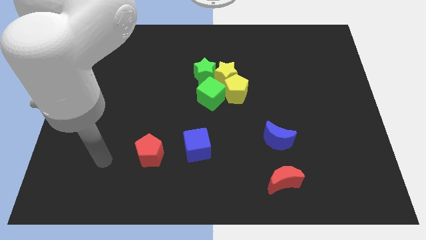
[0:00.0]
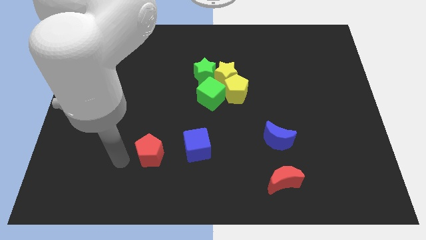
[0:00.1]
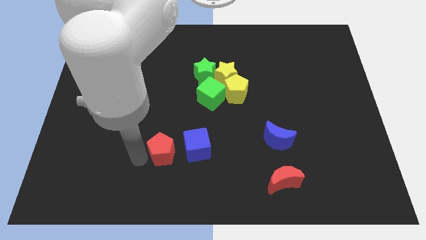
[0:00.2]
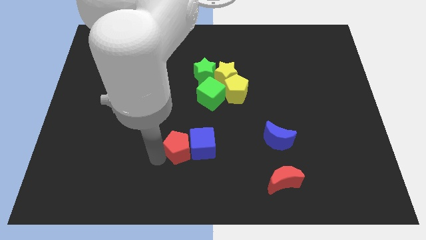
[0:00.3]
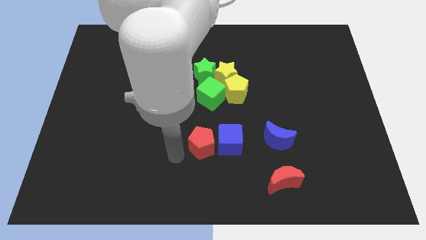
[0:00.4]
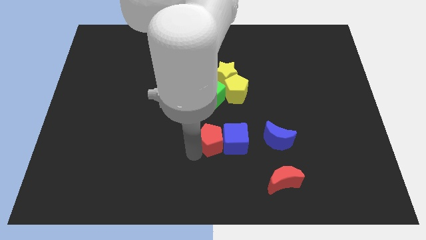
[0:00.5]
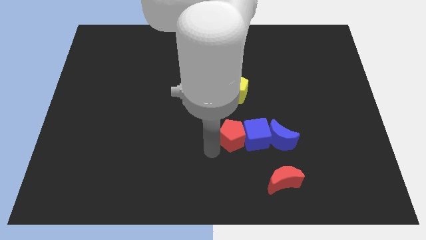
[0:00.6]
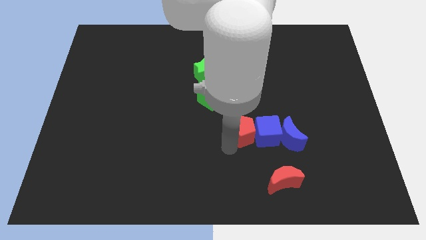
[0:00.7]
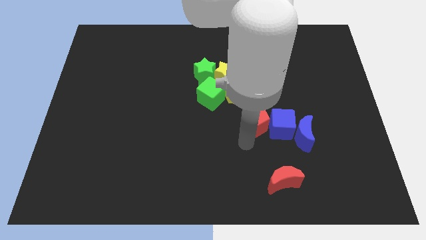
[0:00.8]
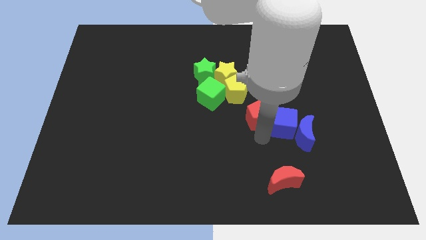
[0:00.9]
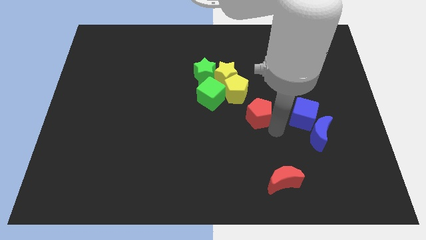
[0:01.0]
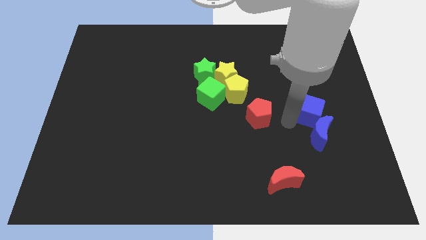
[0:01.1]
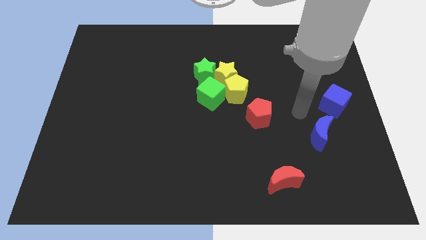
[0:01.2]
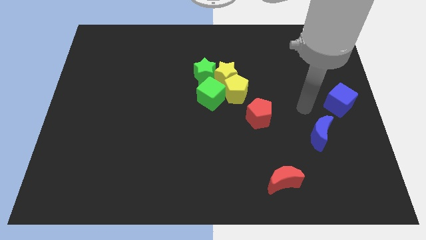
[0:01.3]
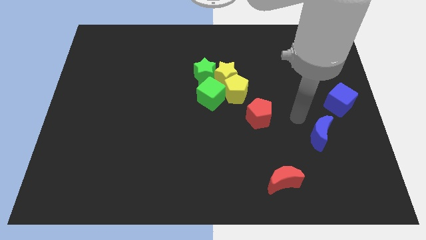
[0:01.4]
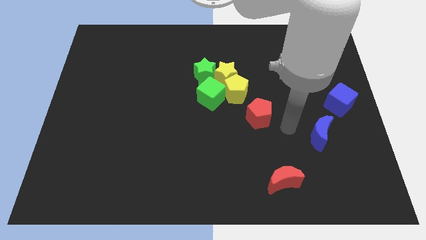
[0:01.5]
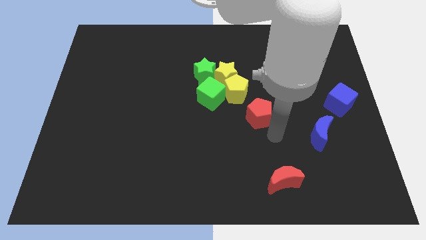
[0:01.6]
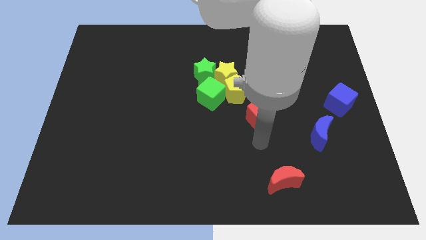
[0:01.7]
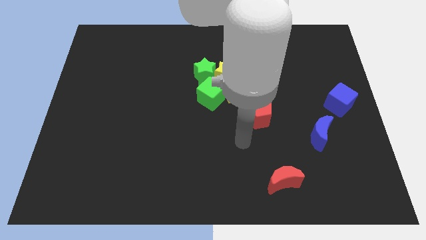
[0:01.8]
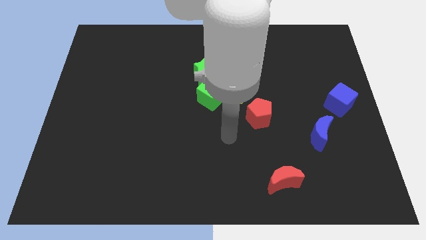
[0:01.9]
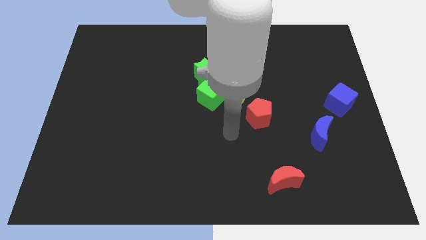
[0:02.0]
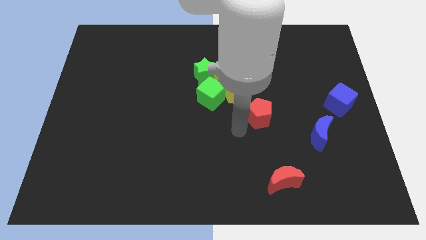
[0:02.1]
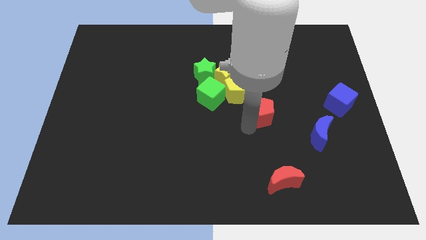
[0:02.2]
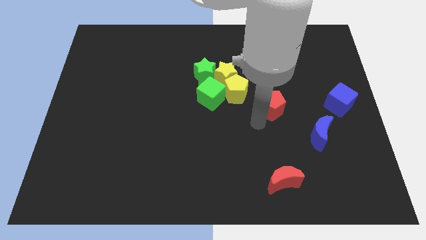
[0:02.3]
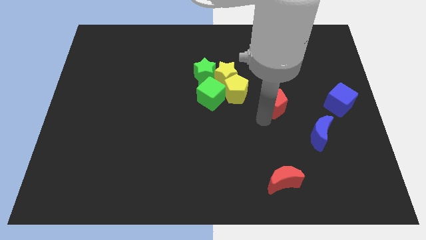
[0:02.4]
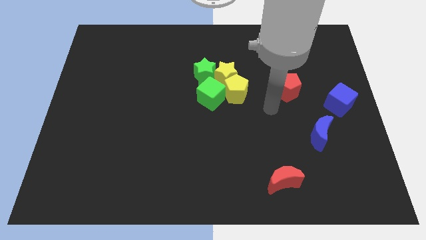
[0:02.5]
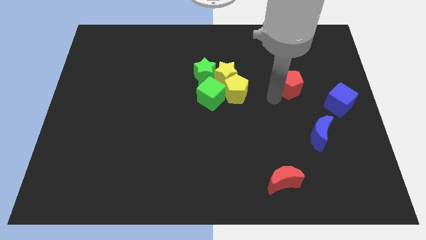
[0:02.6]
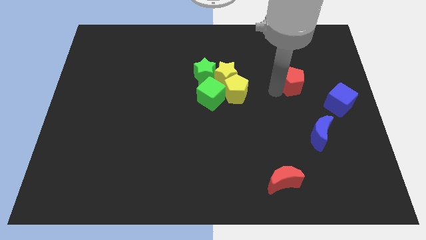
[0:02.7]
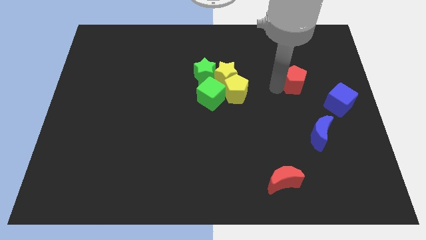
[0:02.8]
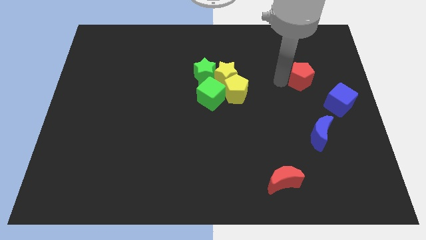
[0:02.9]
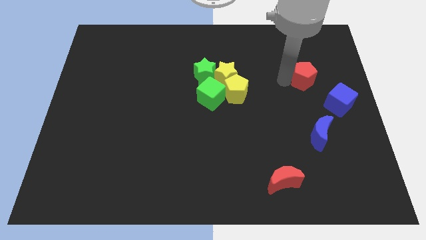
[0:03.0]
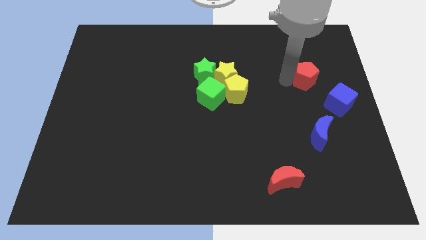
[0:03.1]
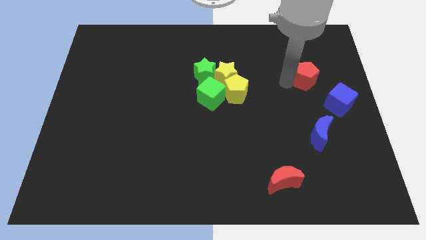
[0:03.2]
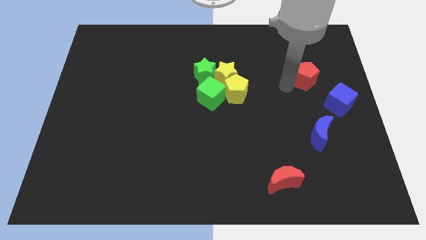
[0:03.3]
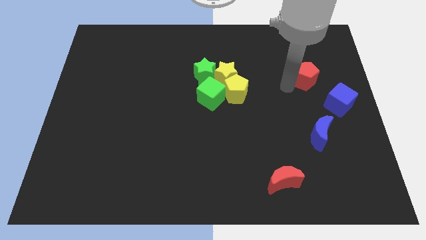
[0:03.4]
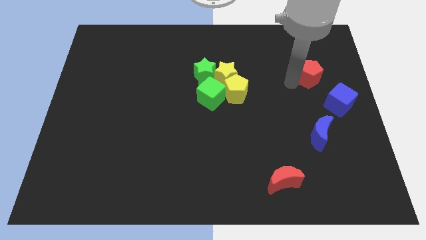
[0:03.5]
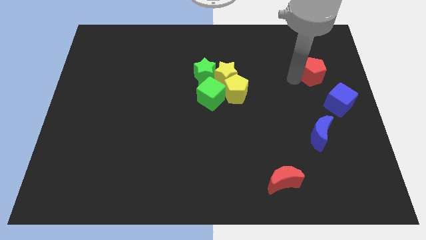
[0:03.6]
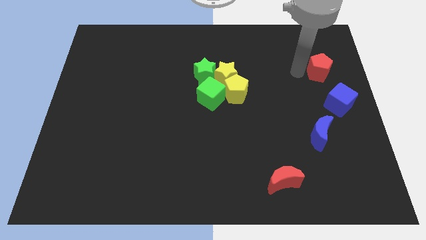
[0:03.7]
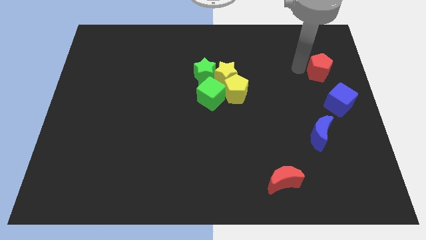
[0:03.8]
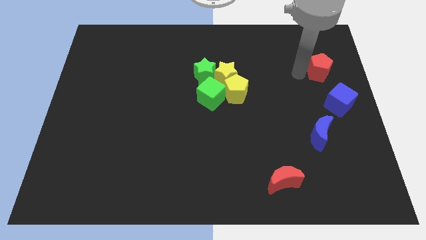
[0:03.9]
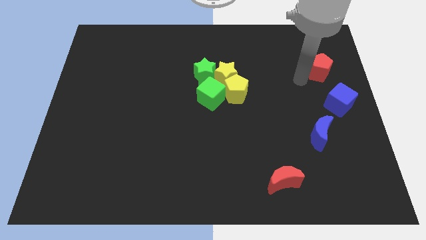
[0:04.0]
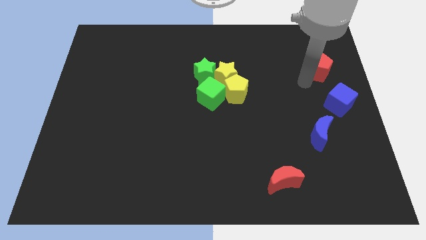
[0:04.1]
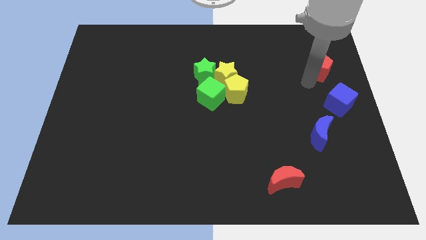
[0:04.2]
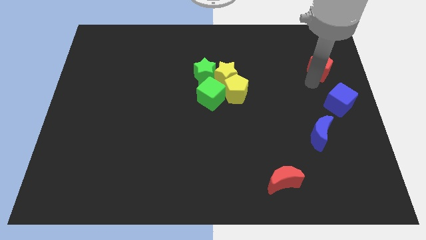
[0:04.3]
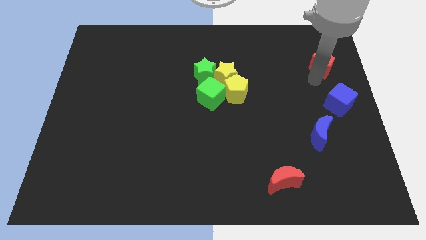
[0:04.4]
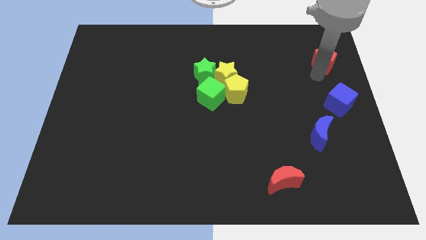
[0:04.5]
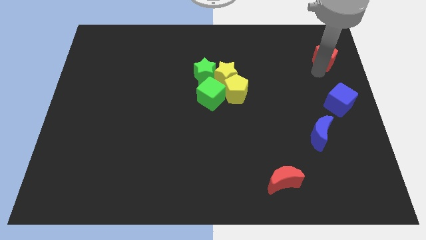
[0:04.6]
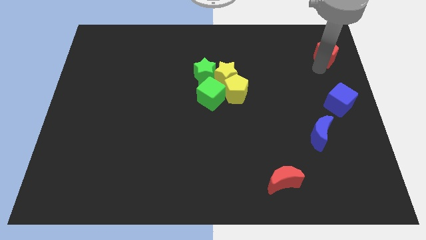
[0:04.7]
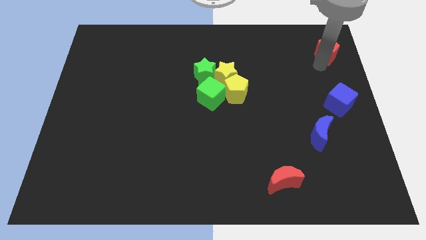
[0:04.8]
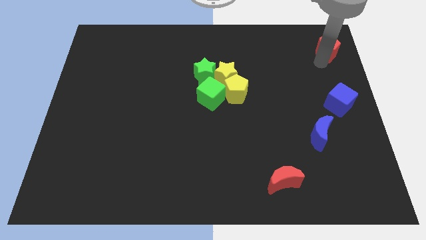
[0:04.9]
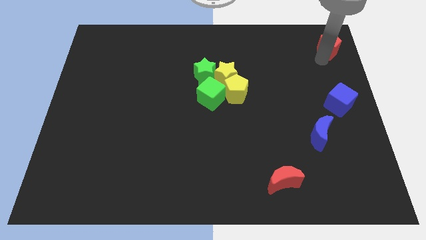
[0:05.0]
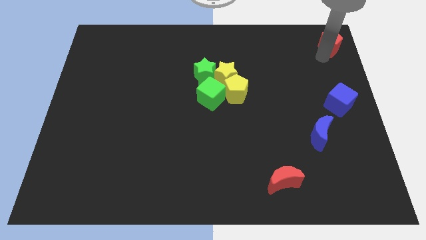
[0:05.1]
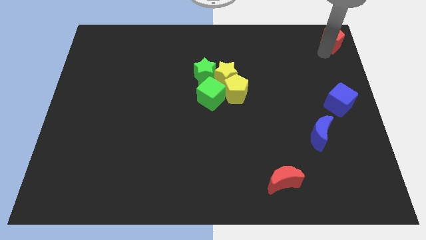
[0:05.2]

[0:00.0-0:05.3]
push the blue cube and red pentagon in a vertical line at the right side of the group of blocks

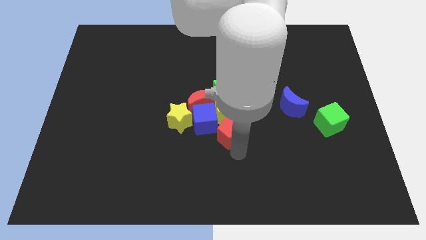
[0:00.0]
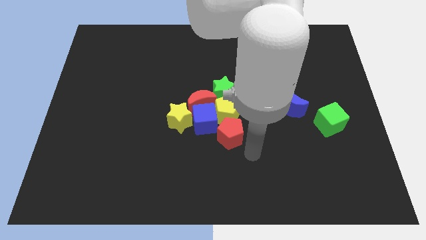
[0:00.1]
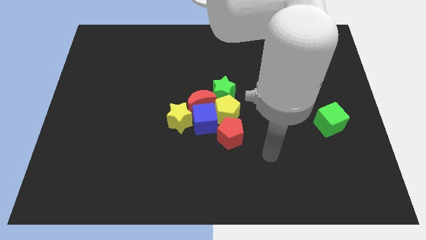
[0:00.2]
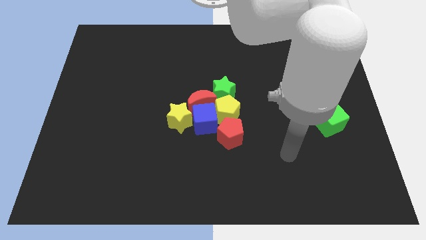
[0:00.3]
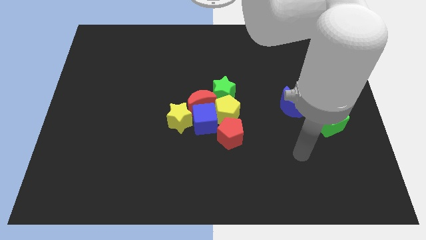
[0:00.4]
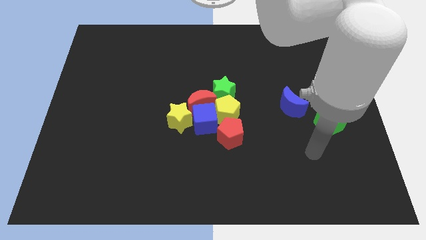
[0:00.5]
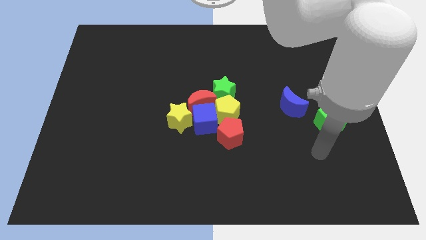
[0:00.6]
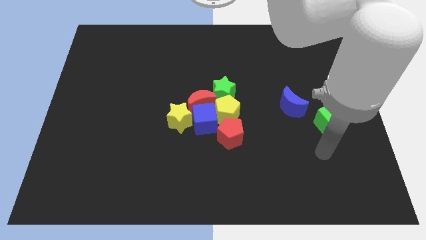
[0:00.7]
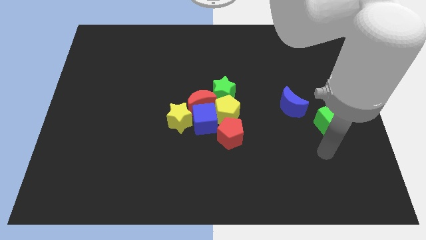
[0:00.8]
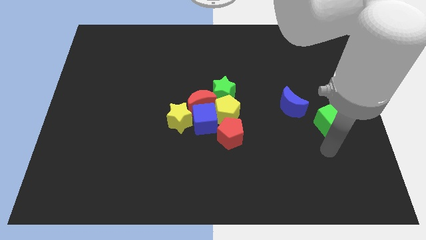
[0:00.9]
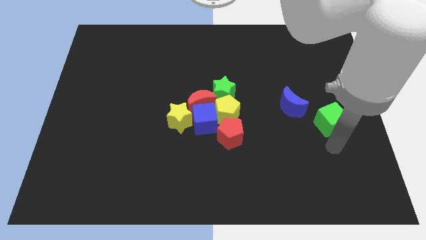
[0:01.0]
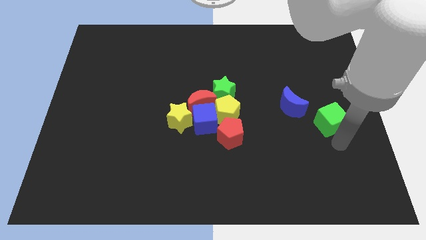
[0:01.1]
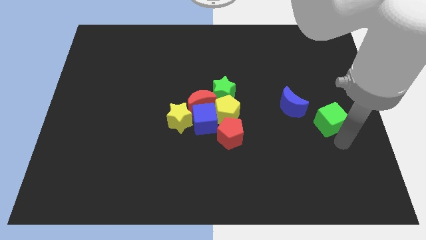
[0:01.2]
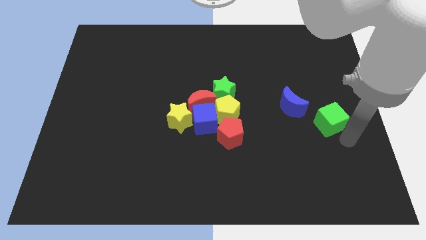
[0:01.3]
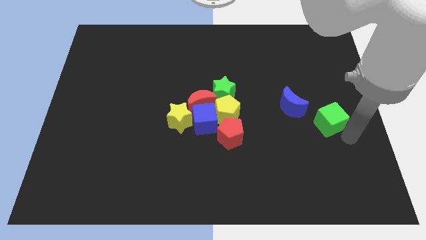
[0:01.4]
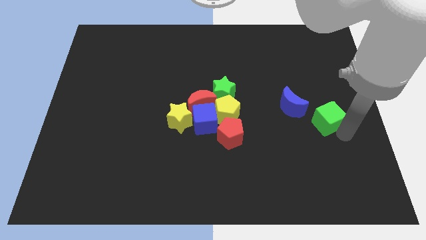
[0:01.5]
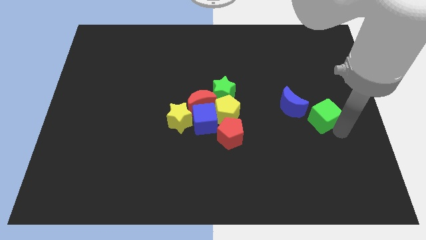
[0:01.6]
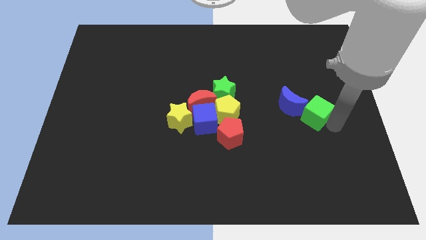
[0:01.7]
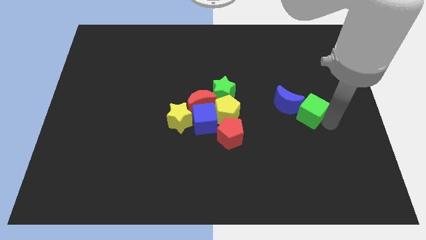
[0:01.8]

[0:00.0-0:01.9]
push the green cube into the blue crescent

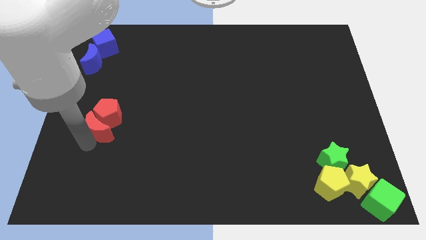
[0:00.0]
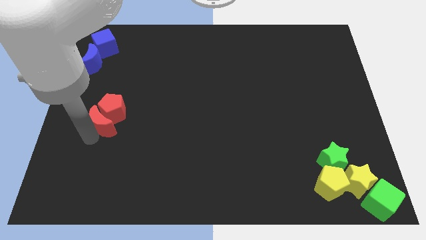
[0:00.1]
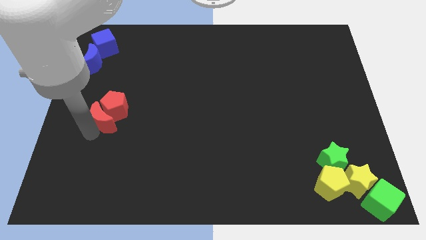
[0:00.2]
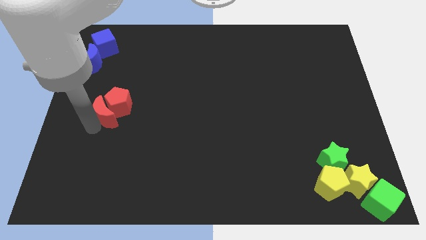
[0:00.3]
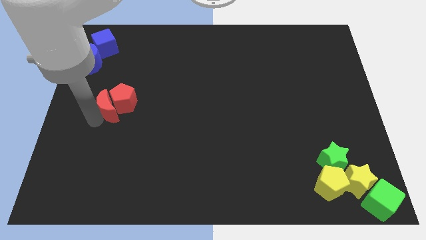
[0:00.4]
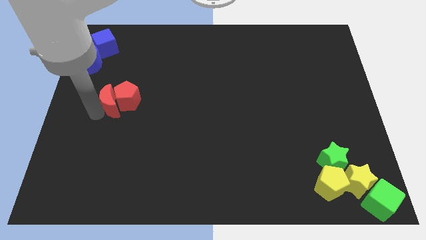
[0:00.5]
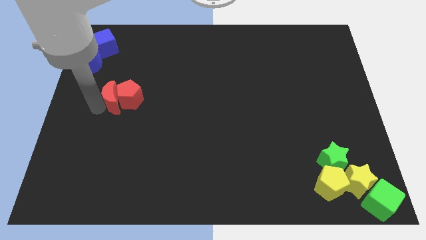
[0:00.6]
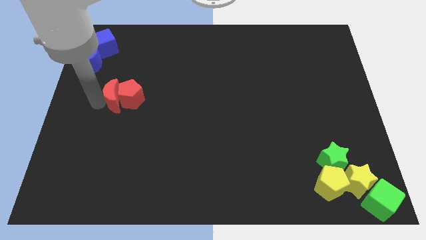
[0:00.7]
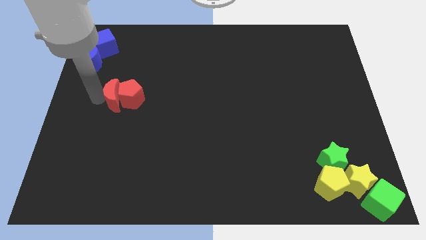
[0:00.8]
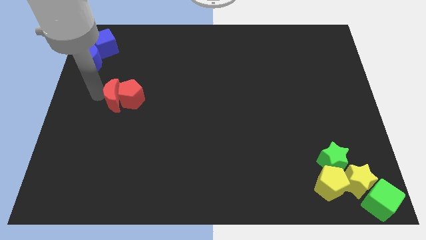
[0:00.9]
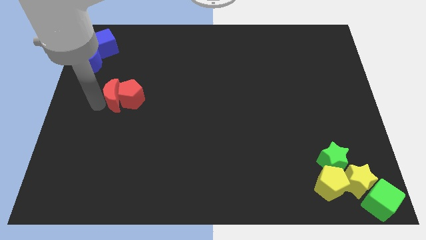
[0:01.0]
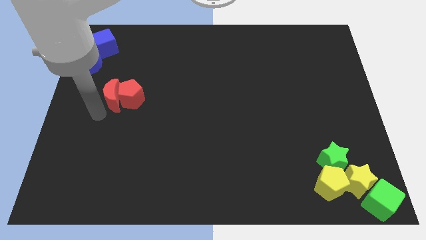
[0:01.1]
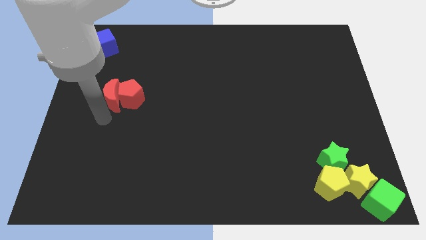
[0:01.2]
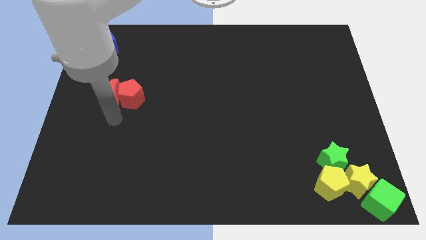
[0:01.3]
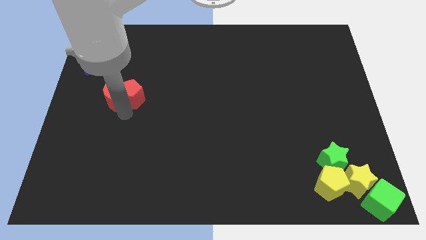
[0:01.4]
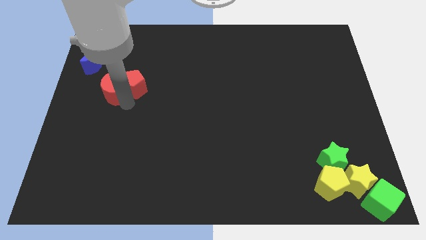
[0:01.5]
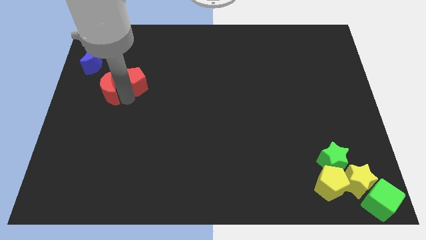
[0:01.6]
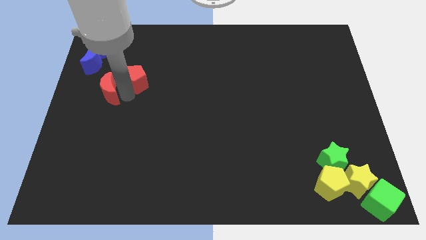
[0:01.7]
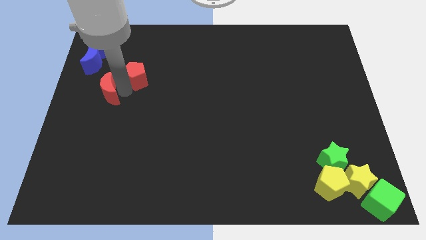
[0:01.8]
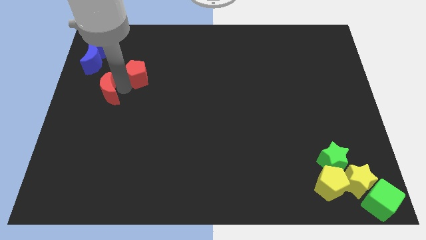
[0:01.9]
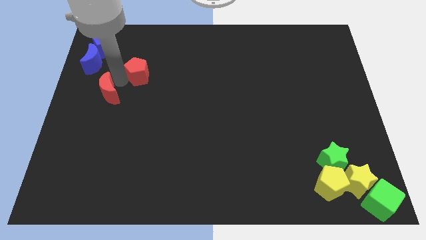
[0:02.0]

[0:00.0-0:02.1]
push red pentagon with the red moon
